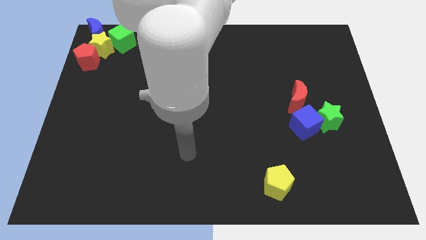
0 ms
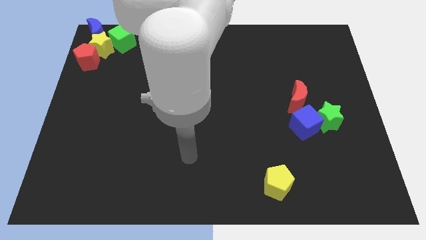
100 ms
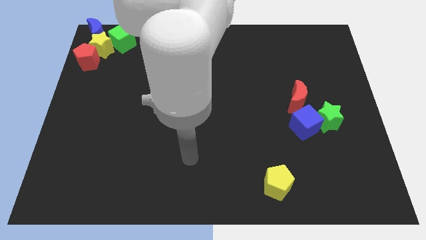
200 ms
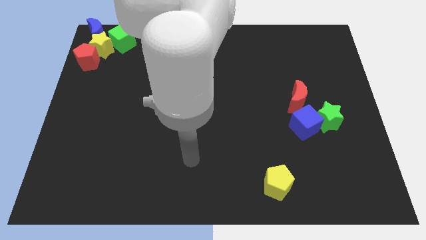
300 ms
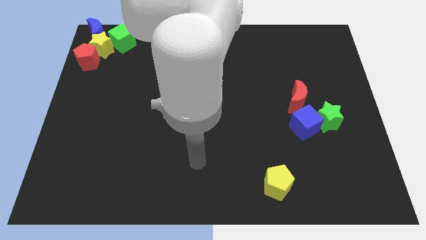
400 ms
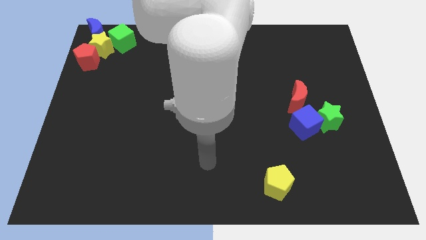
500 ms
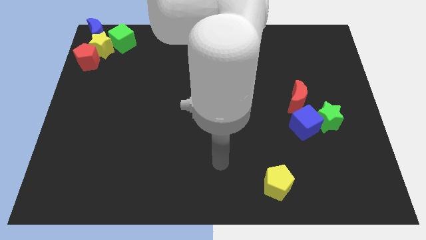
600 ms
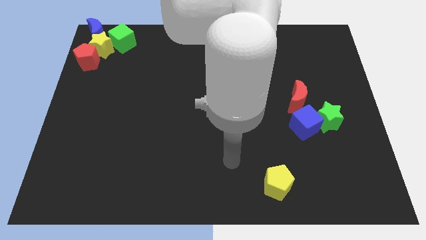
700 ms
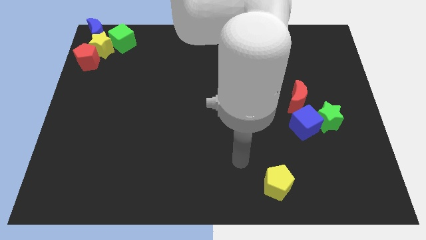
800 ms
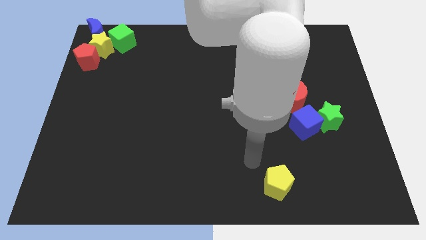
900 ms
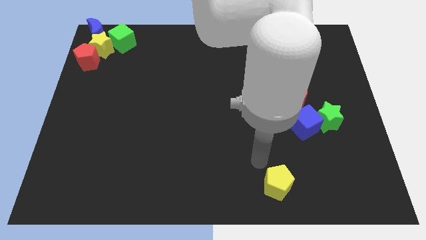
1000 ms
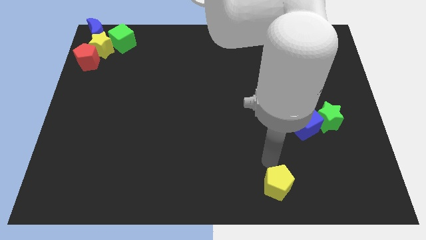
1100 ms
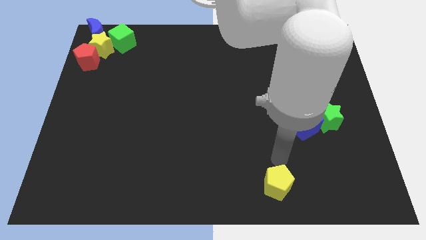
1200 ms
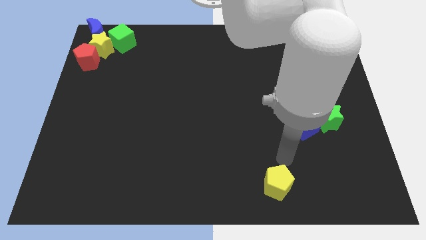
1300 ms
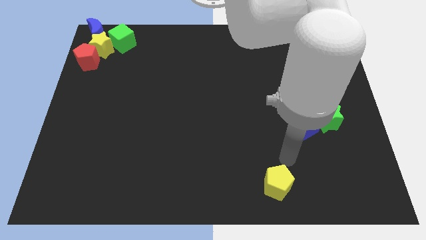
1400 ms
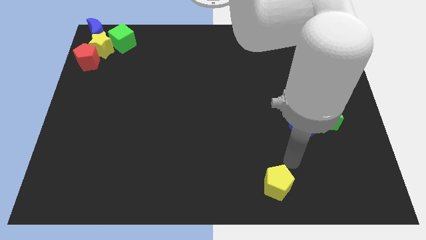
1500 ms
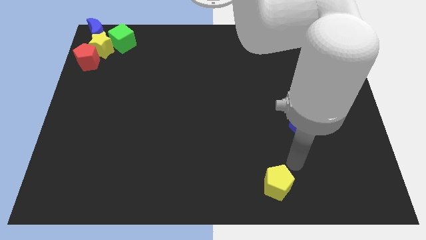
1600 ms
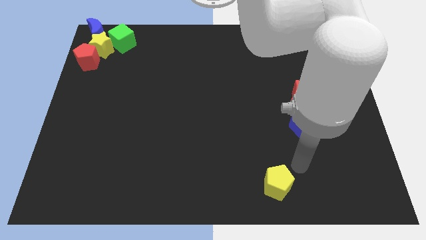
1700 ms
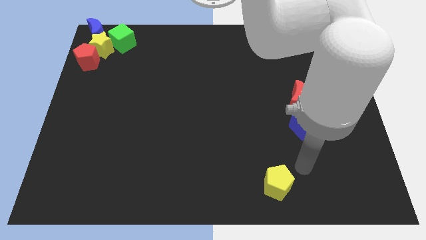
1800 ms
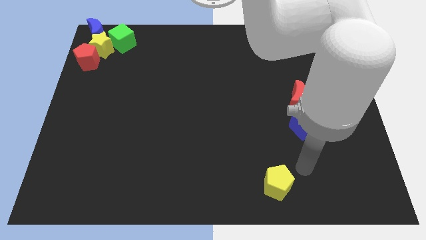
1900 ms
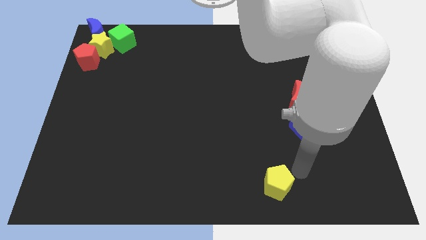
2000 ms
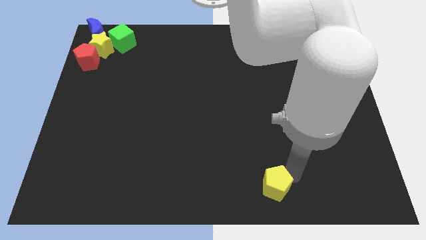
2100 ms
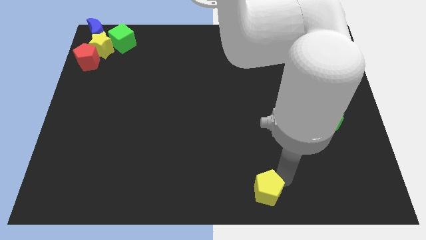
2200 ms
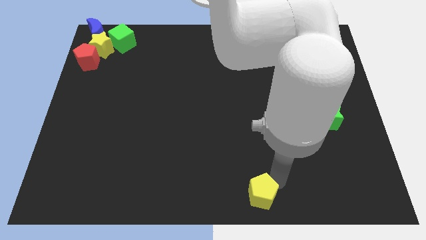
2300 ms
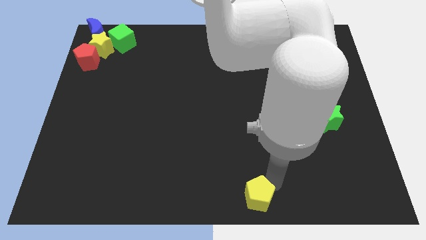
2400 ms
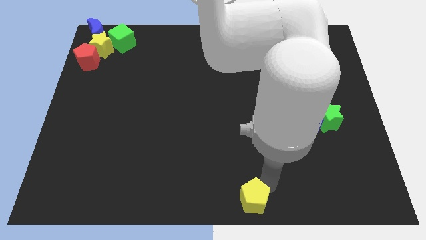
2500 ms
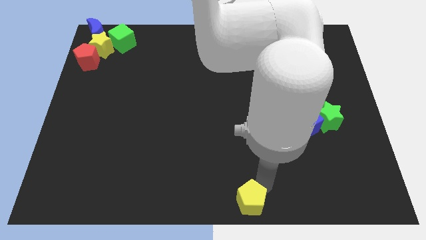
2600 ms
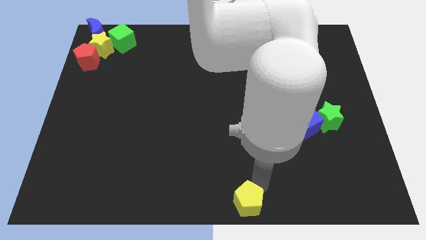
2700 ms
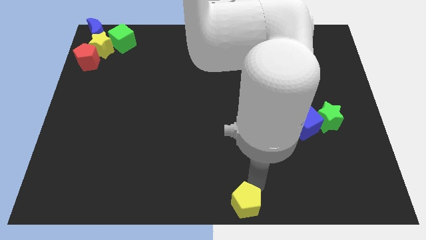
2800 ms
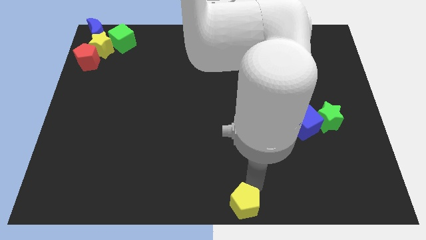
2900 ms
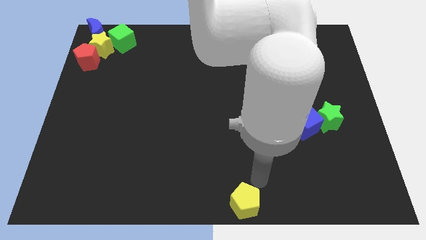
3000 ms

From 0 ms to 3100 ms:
push the yellow pentagon to the bottom center of the board

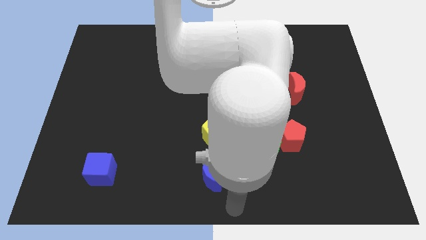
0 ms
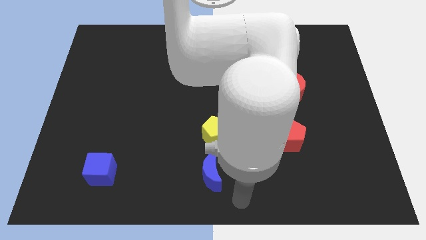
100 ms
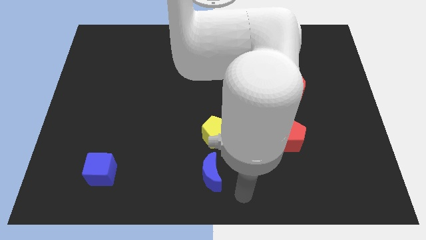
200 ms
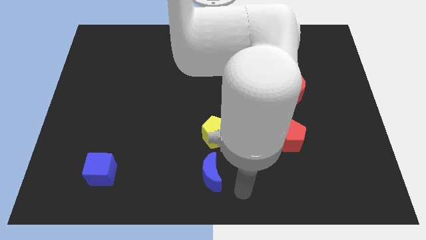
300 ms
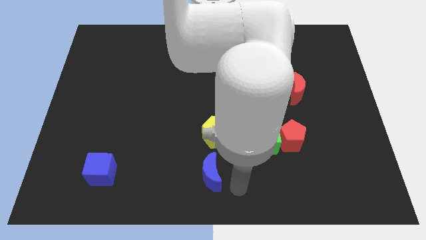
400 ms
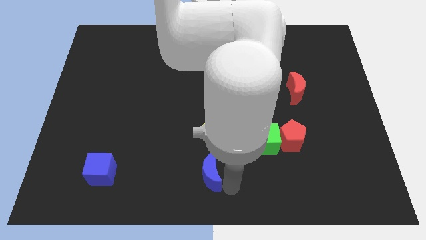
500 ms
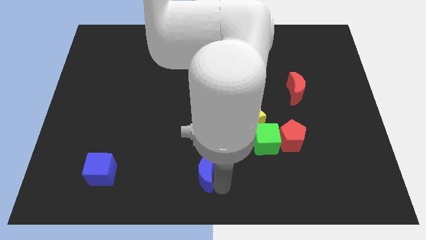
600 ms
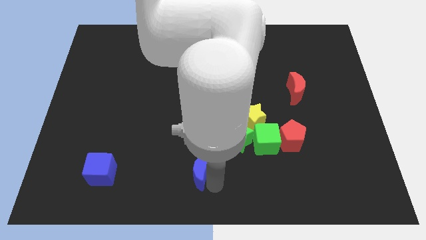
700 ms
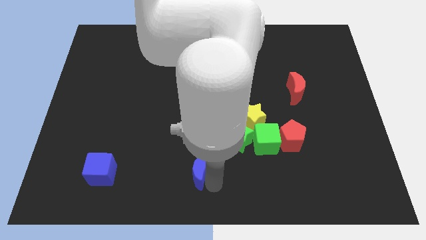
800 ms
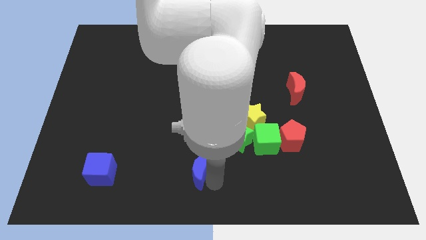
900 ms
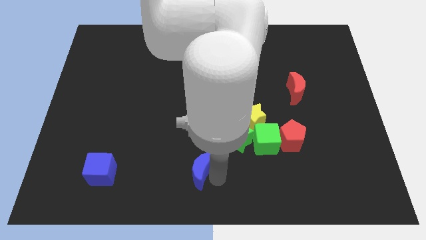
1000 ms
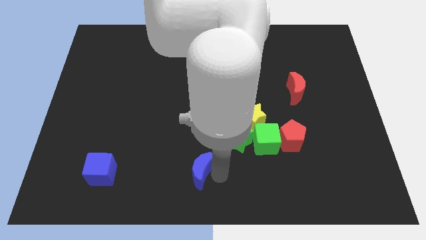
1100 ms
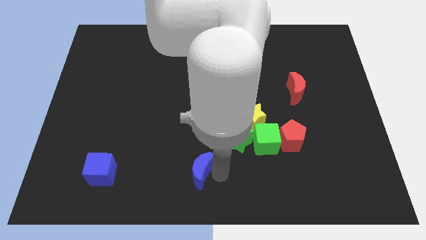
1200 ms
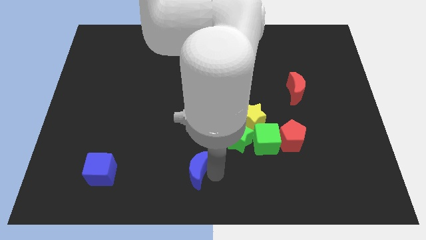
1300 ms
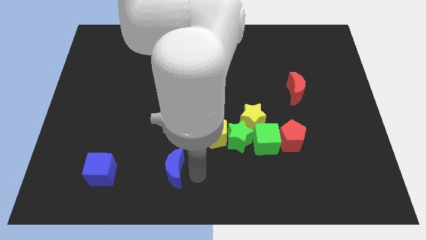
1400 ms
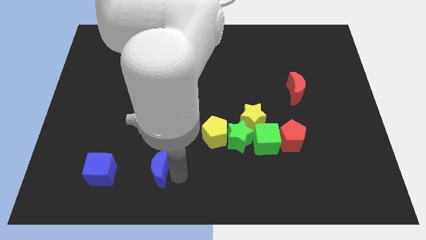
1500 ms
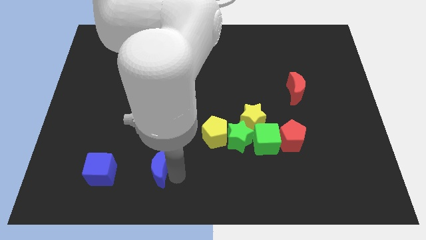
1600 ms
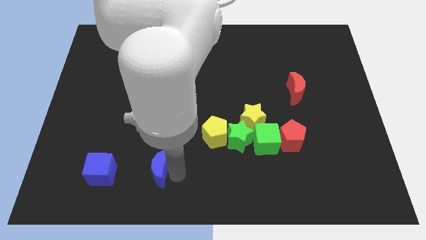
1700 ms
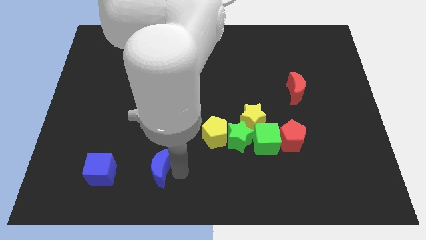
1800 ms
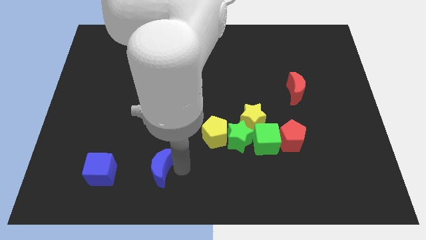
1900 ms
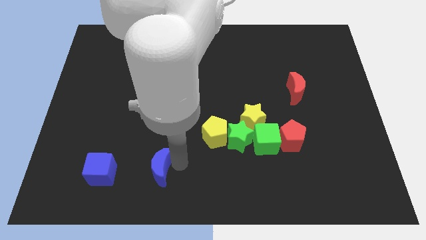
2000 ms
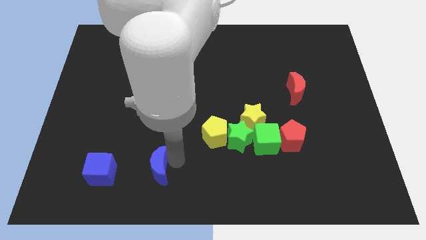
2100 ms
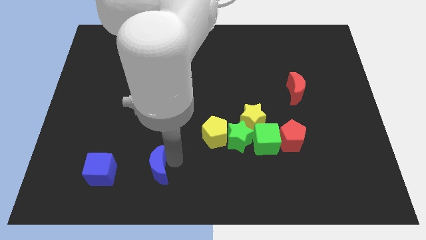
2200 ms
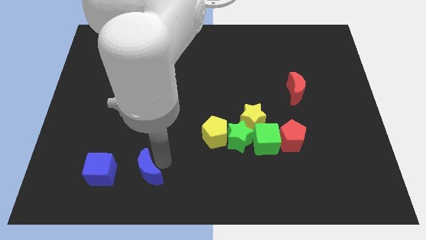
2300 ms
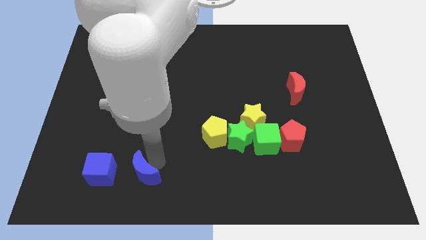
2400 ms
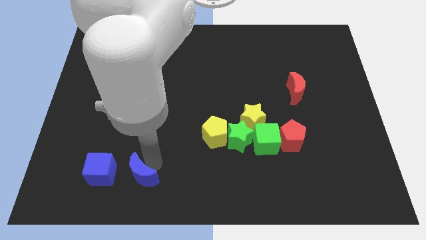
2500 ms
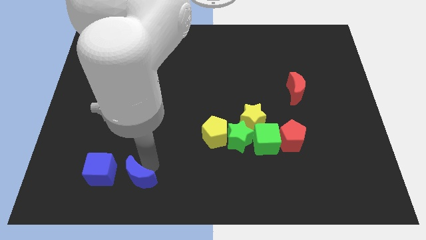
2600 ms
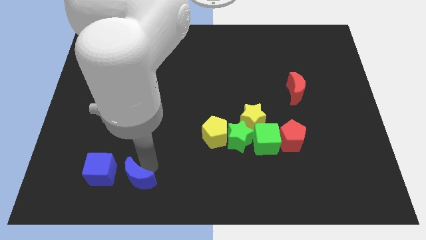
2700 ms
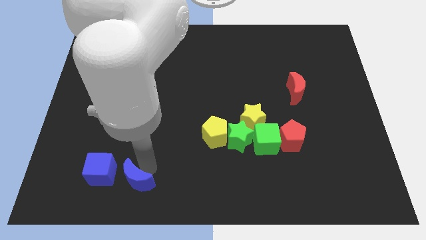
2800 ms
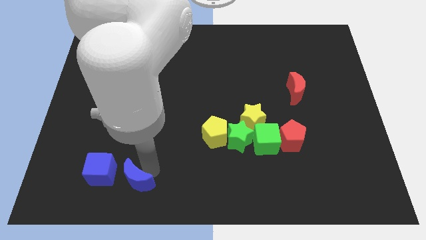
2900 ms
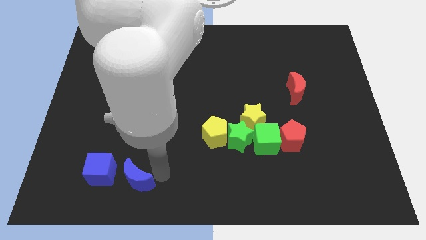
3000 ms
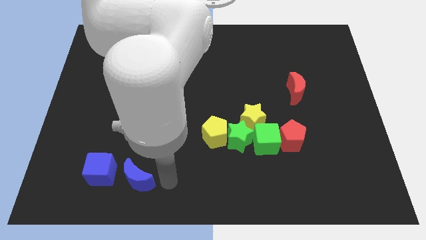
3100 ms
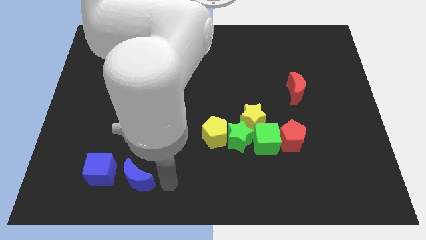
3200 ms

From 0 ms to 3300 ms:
move blue moon close to the blue cube

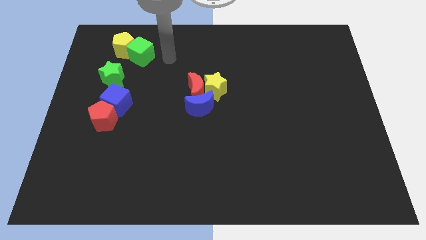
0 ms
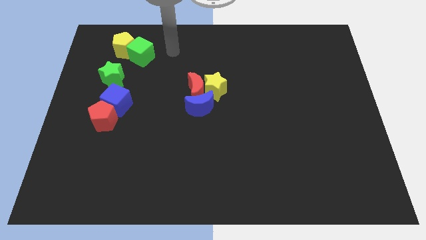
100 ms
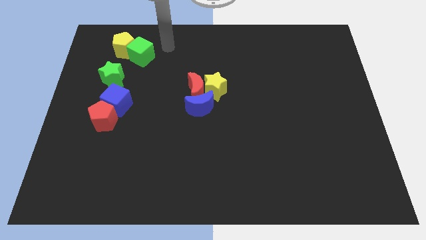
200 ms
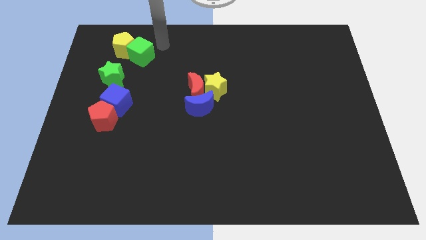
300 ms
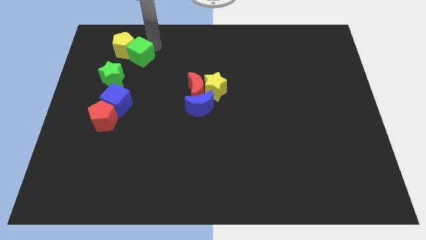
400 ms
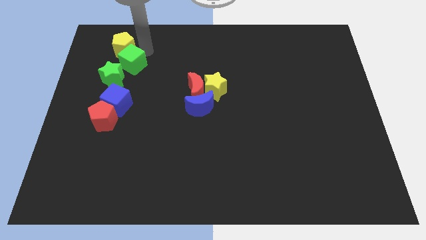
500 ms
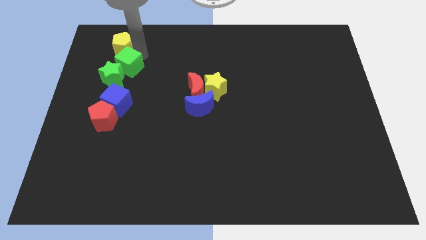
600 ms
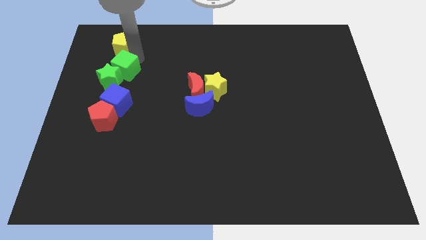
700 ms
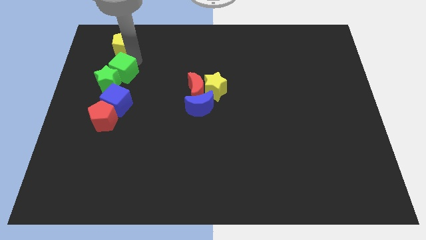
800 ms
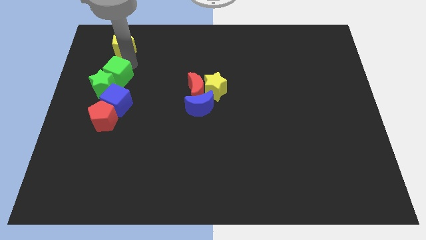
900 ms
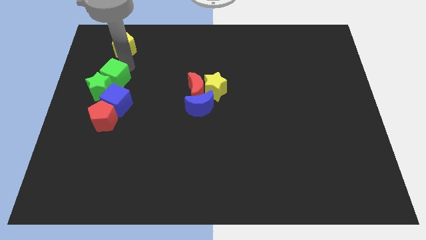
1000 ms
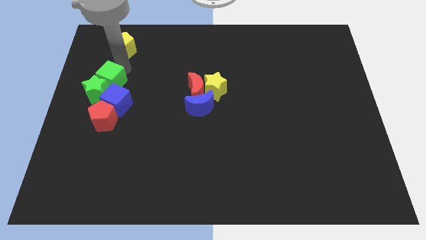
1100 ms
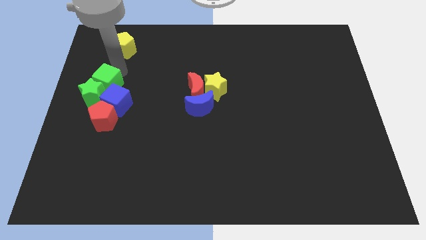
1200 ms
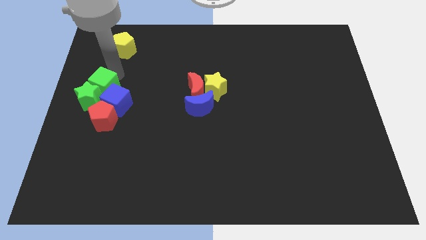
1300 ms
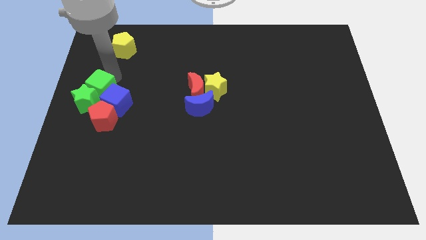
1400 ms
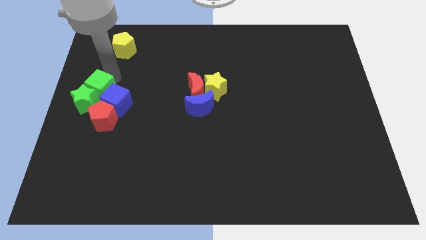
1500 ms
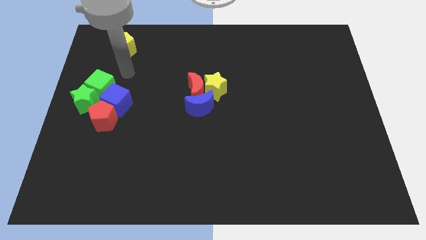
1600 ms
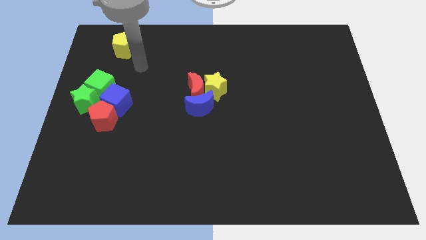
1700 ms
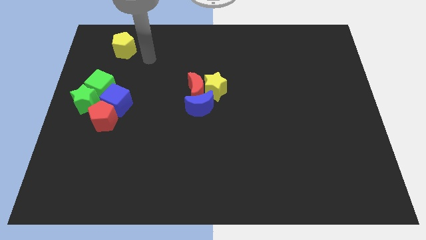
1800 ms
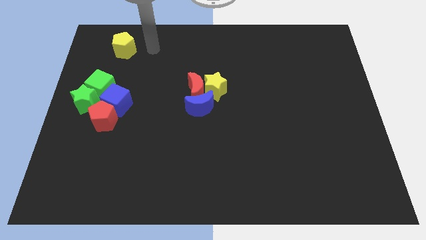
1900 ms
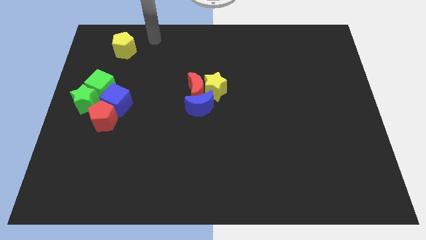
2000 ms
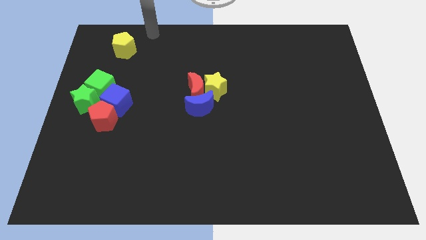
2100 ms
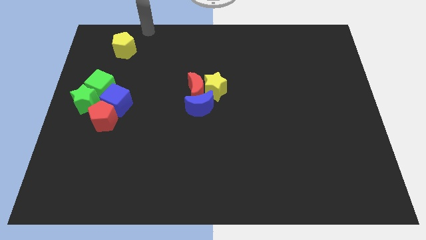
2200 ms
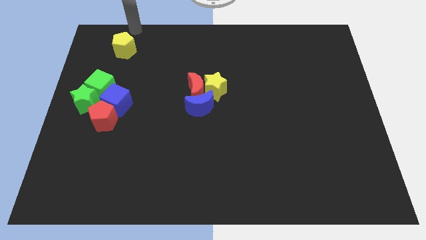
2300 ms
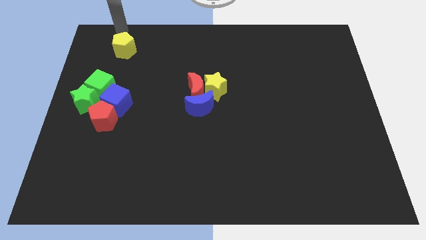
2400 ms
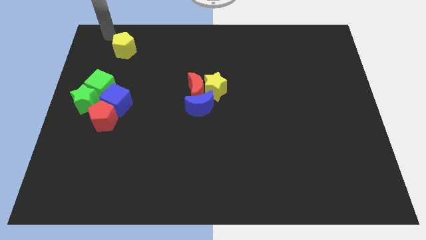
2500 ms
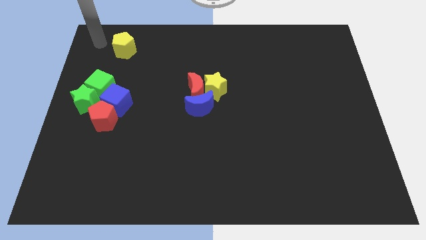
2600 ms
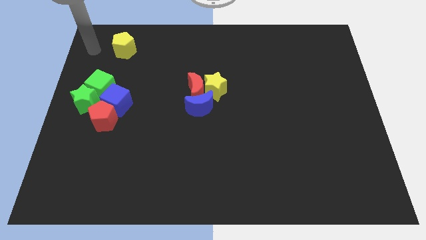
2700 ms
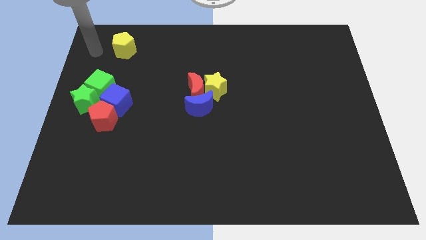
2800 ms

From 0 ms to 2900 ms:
move green cube into green star
